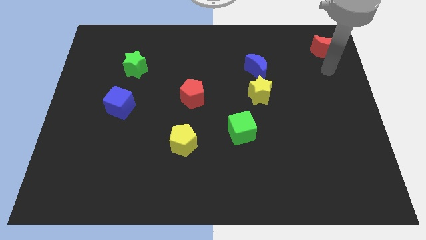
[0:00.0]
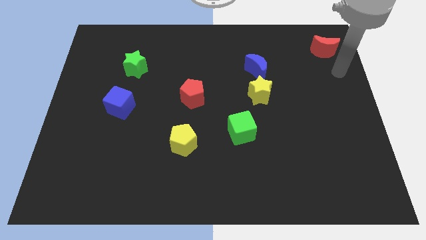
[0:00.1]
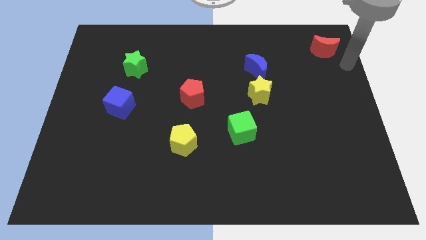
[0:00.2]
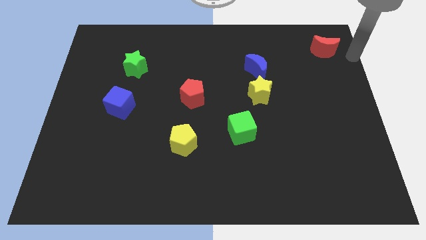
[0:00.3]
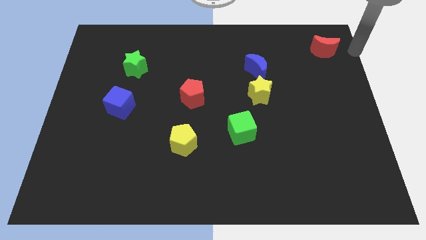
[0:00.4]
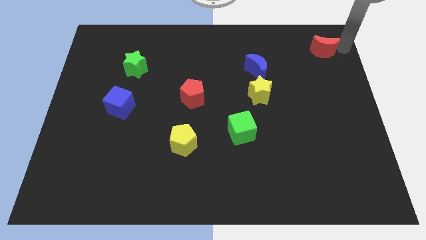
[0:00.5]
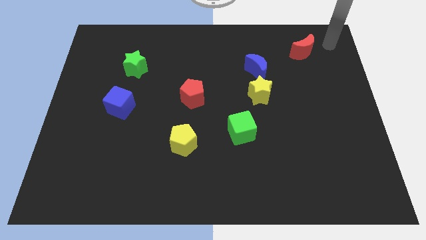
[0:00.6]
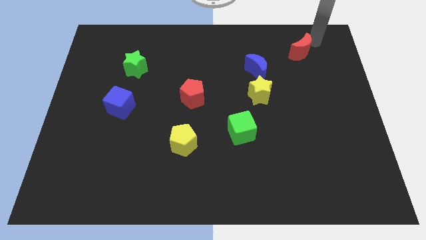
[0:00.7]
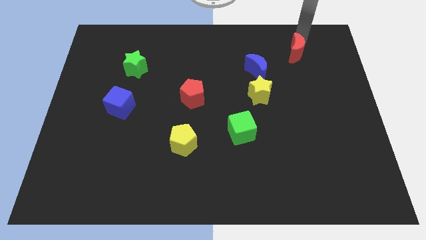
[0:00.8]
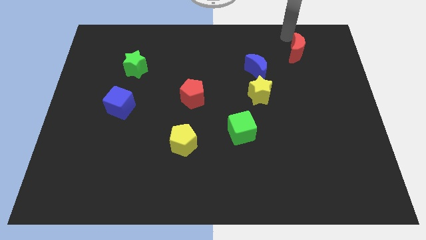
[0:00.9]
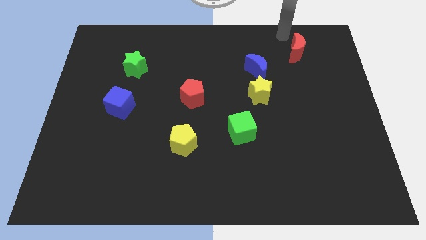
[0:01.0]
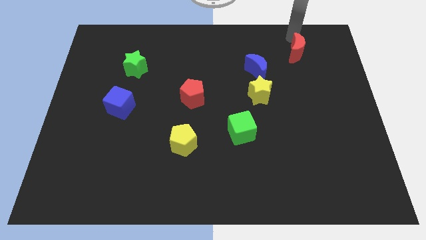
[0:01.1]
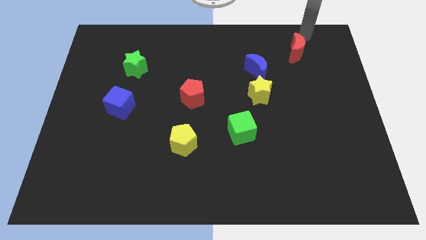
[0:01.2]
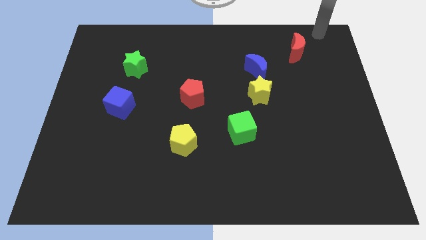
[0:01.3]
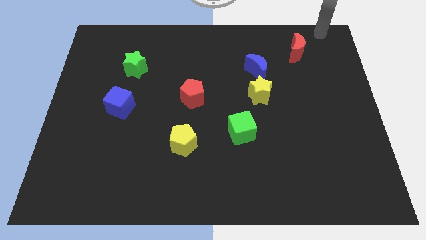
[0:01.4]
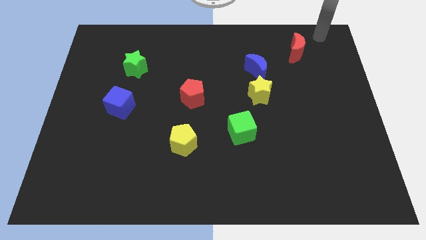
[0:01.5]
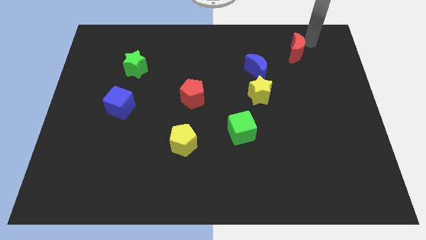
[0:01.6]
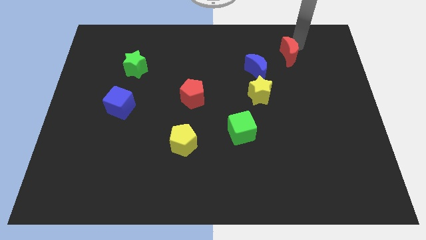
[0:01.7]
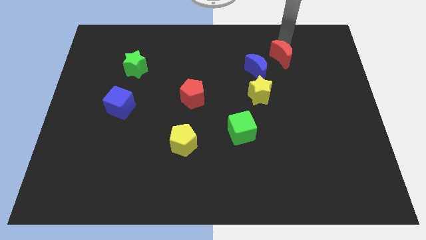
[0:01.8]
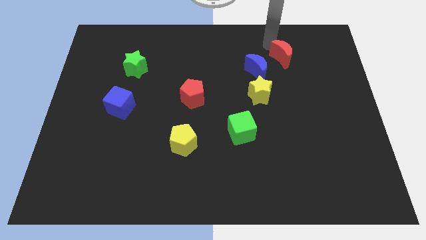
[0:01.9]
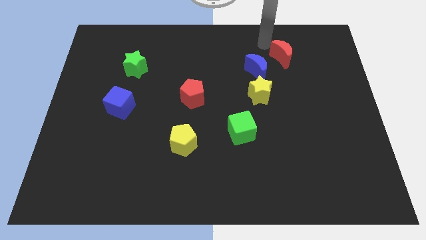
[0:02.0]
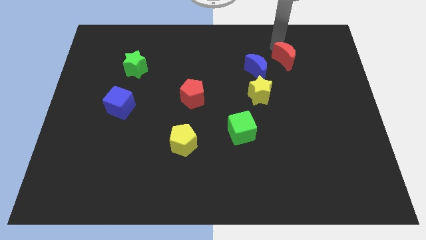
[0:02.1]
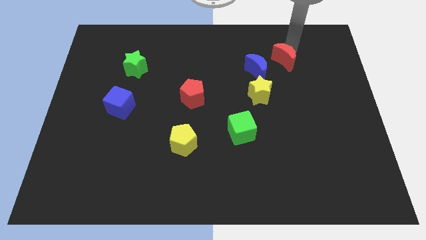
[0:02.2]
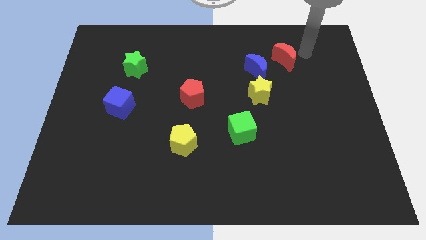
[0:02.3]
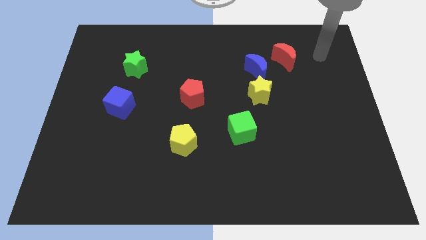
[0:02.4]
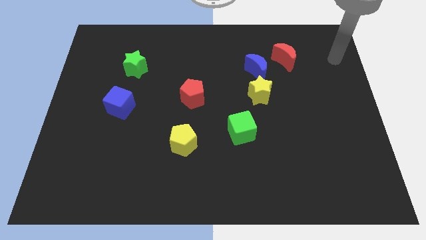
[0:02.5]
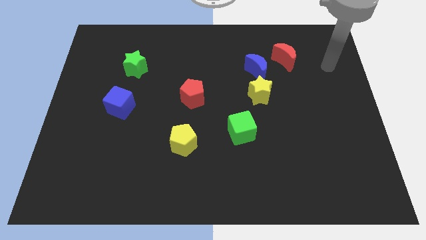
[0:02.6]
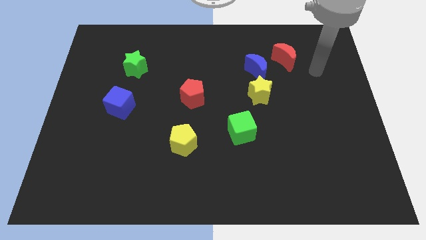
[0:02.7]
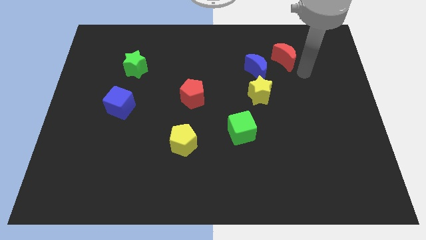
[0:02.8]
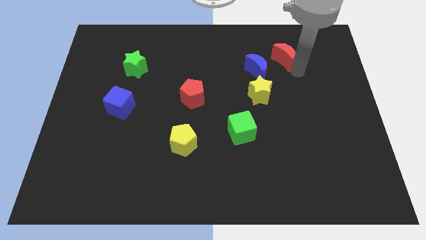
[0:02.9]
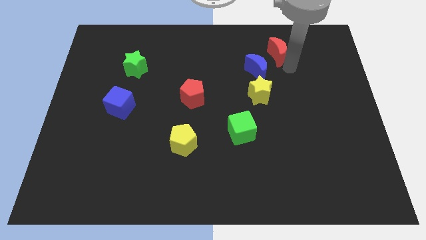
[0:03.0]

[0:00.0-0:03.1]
place the red crescent diagonal to the blue crescent

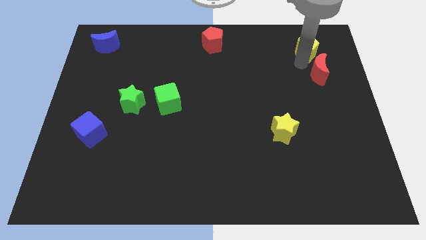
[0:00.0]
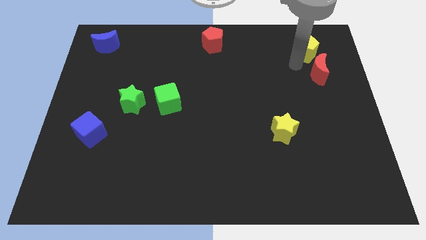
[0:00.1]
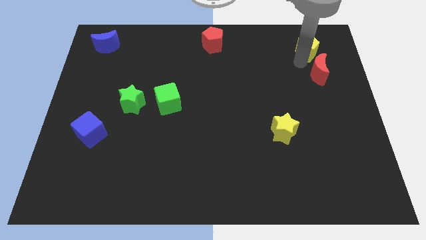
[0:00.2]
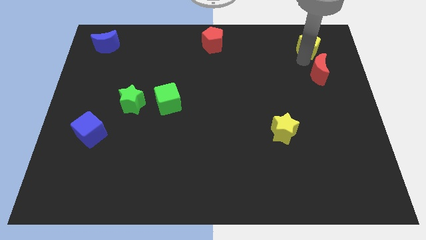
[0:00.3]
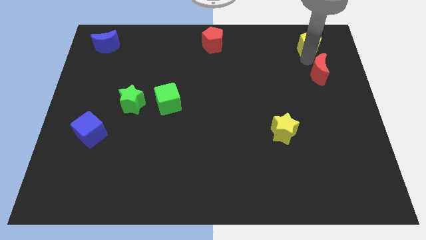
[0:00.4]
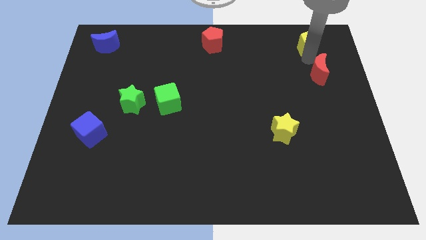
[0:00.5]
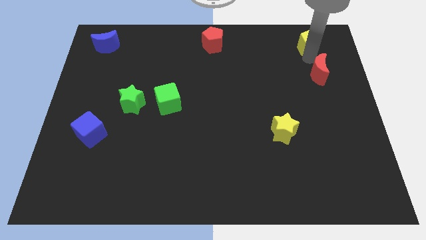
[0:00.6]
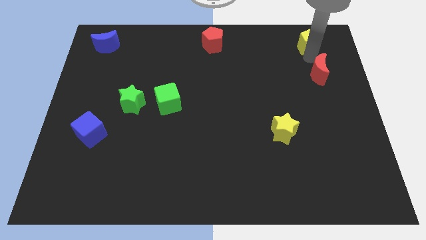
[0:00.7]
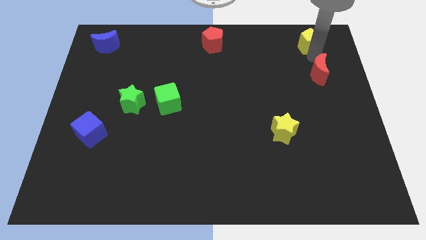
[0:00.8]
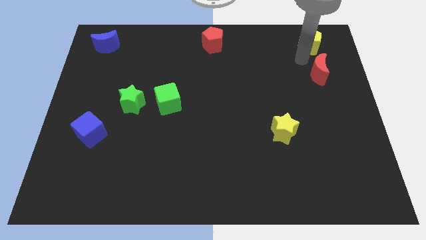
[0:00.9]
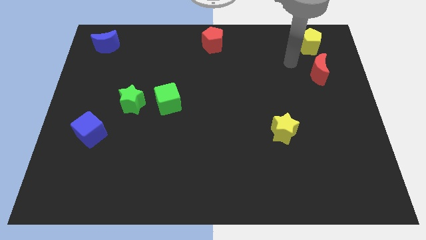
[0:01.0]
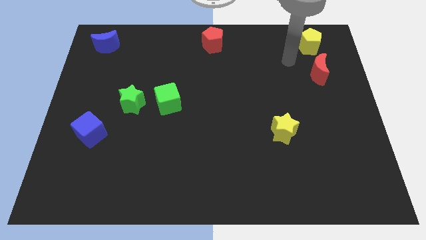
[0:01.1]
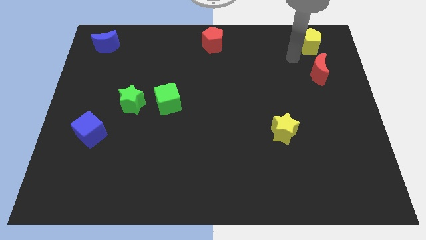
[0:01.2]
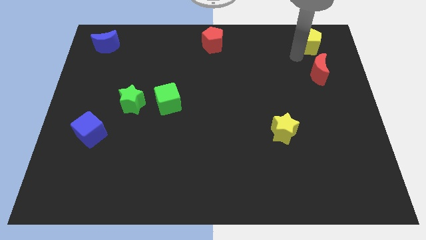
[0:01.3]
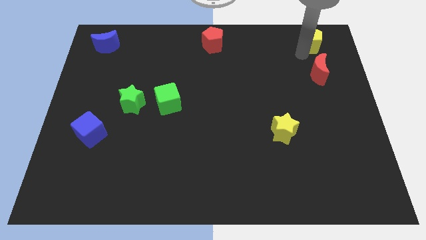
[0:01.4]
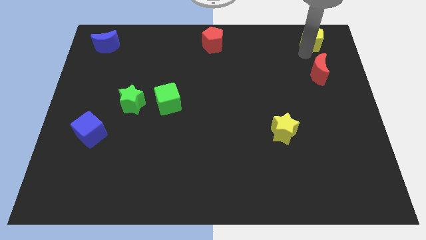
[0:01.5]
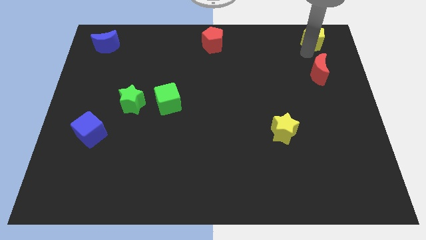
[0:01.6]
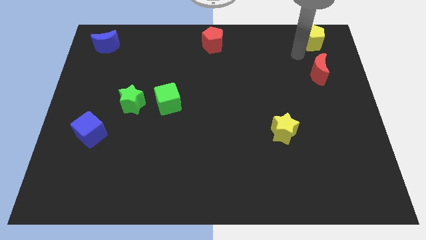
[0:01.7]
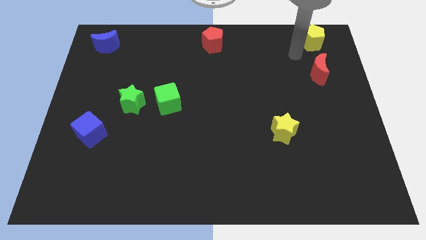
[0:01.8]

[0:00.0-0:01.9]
move the yellow pentagon to the top of the board

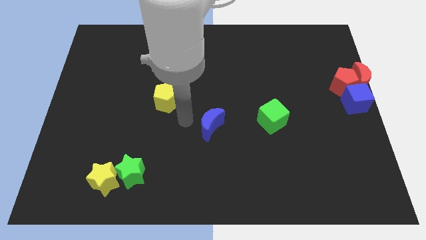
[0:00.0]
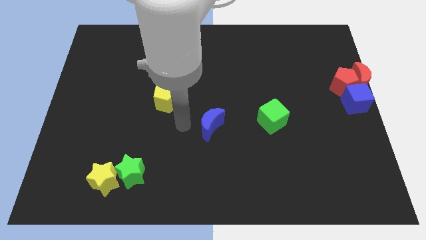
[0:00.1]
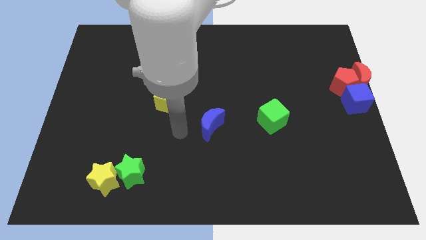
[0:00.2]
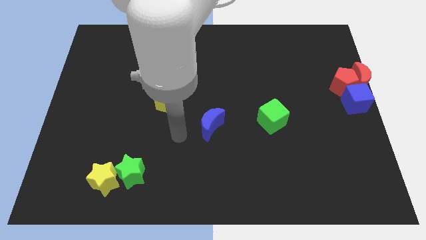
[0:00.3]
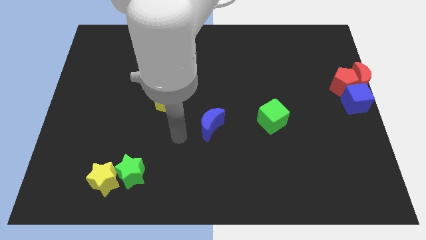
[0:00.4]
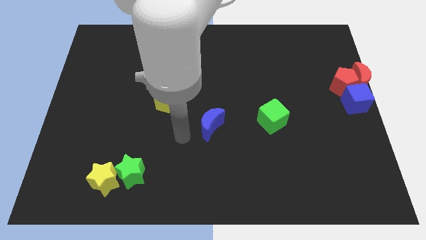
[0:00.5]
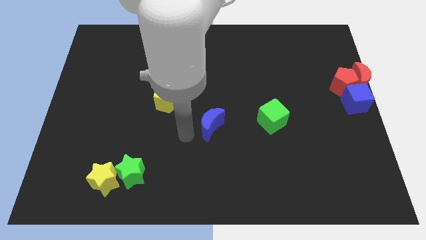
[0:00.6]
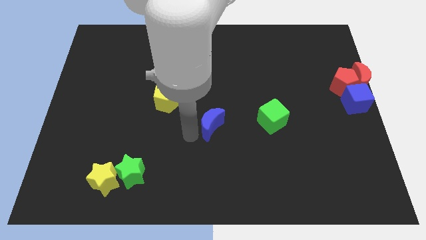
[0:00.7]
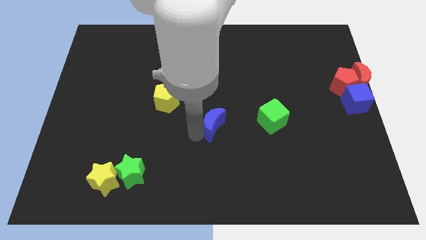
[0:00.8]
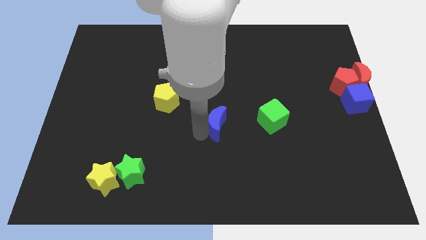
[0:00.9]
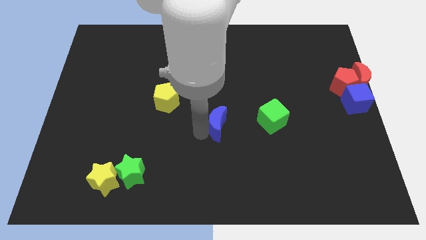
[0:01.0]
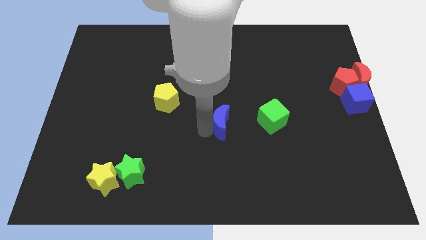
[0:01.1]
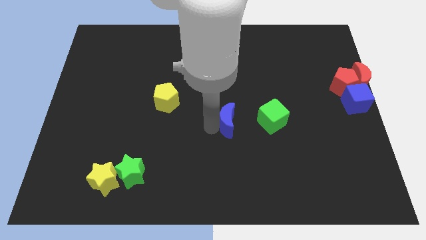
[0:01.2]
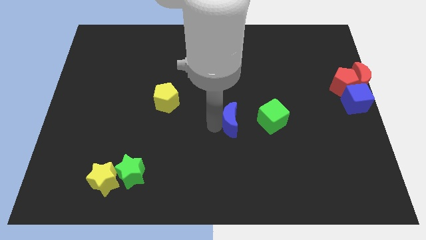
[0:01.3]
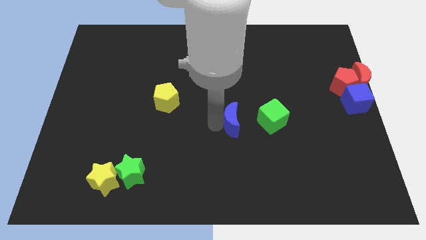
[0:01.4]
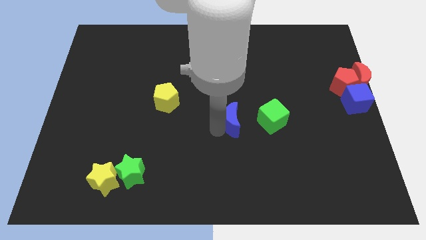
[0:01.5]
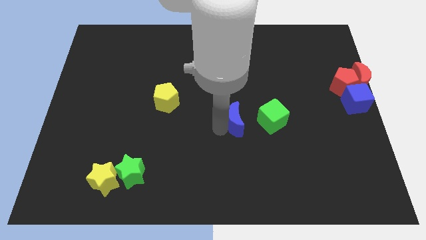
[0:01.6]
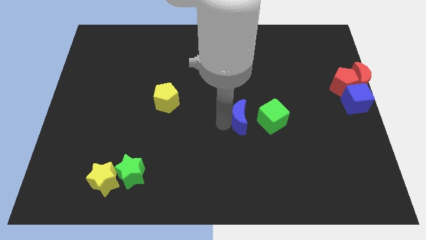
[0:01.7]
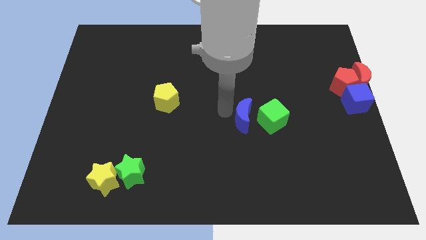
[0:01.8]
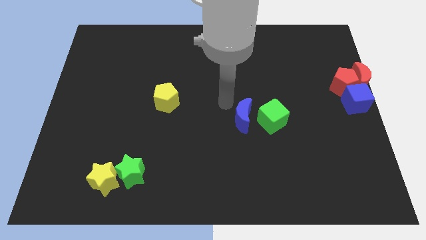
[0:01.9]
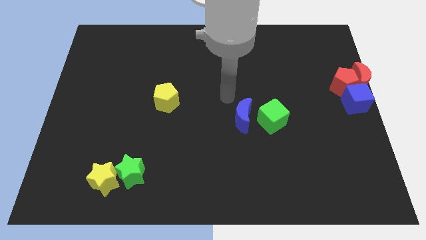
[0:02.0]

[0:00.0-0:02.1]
slide blue moon into green cube

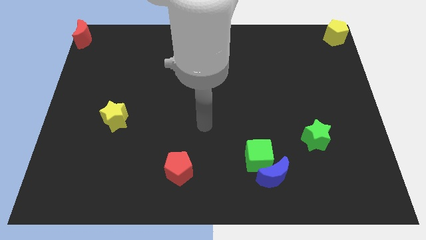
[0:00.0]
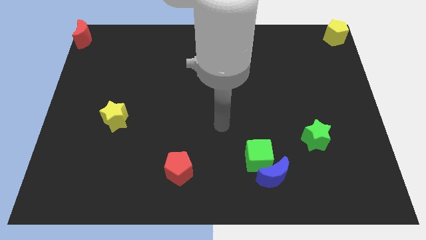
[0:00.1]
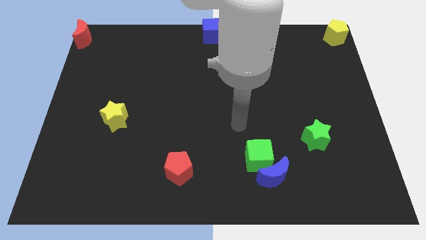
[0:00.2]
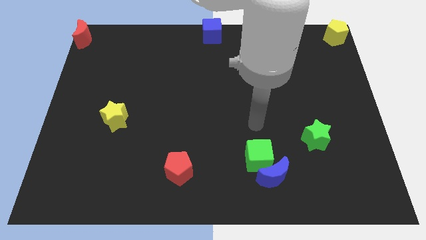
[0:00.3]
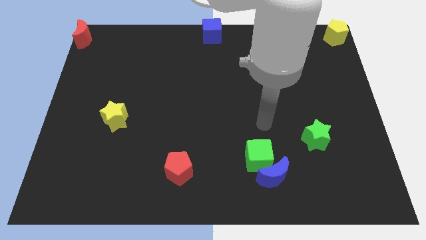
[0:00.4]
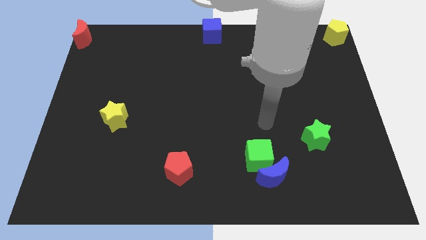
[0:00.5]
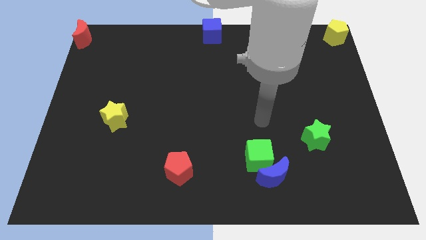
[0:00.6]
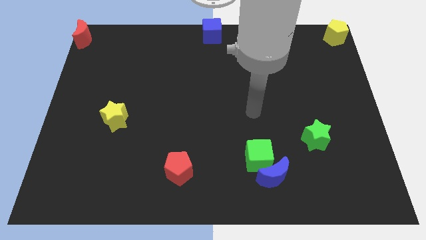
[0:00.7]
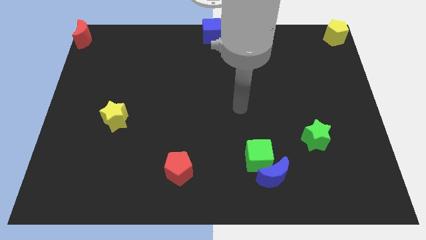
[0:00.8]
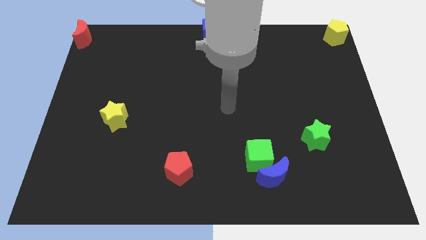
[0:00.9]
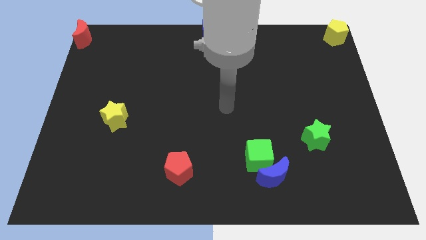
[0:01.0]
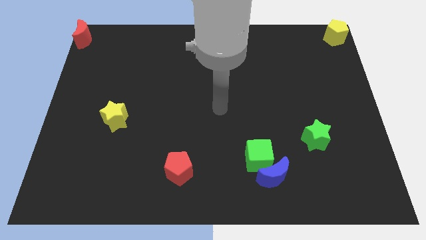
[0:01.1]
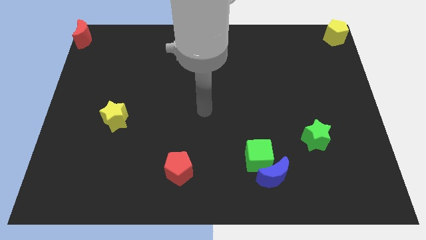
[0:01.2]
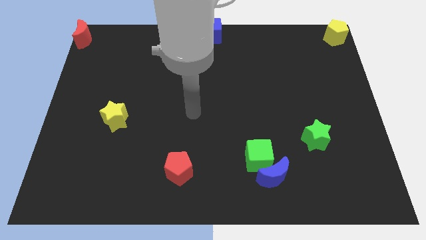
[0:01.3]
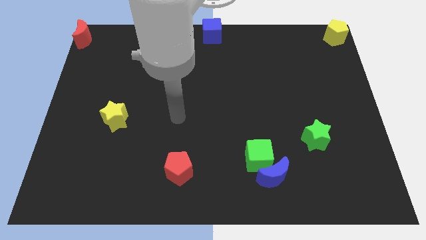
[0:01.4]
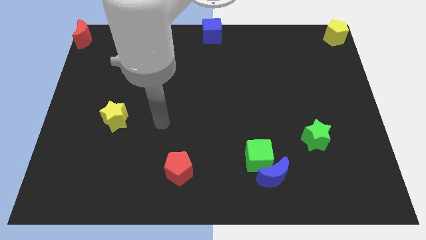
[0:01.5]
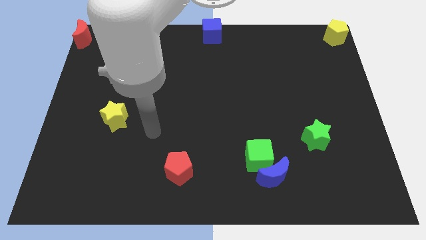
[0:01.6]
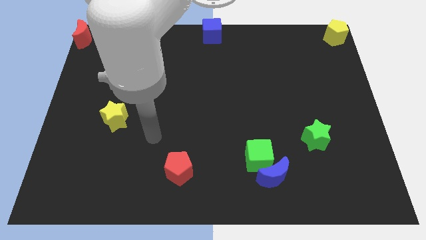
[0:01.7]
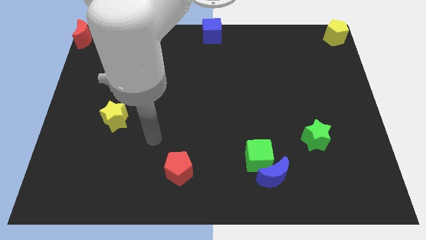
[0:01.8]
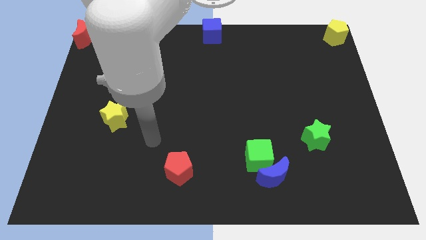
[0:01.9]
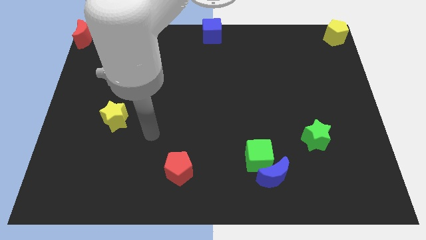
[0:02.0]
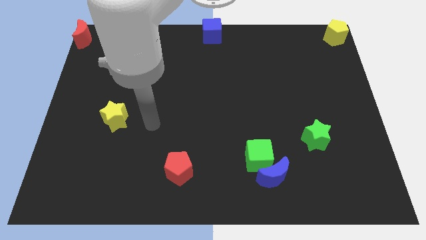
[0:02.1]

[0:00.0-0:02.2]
point your arm between red pentagon and yellow star
